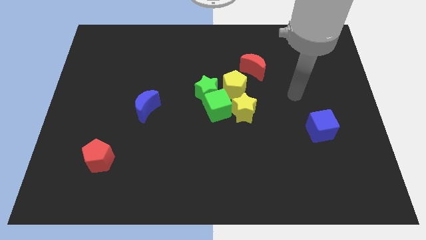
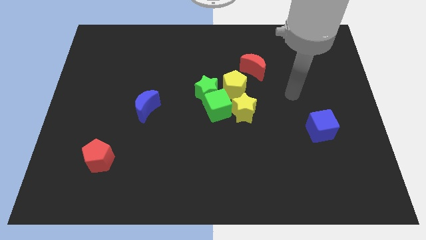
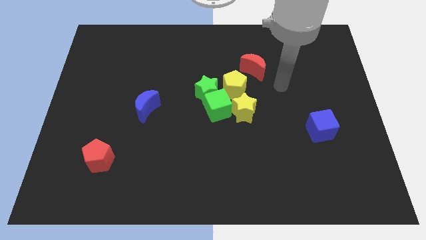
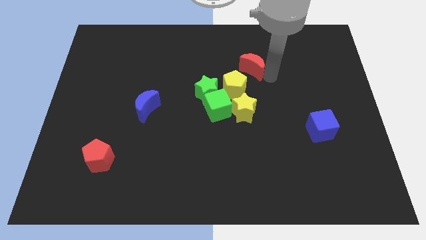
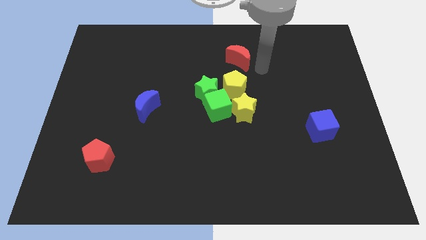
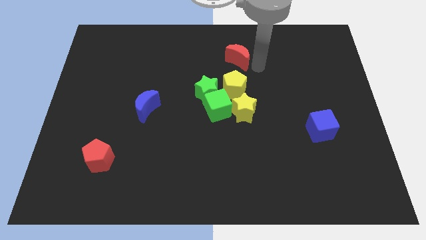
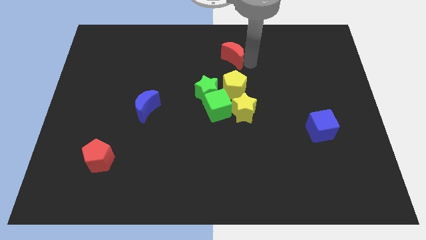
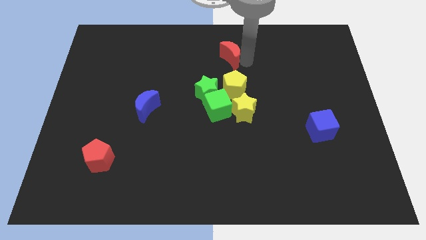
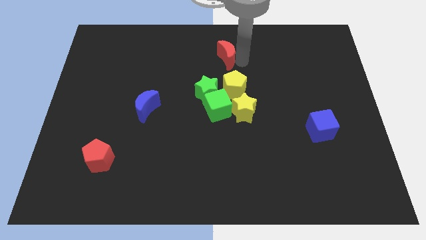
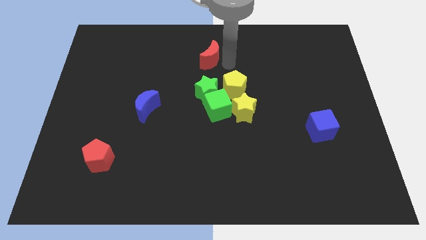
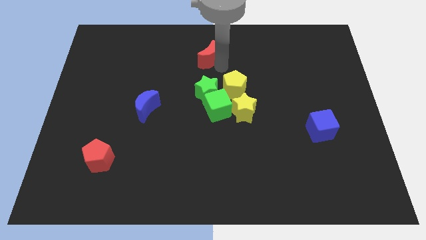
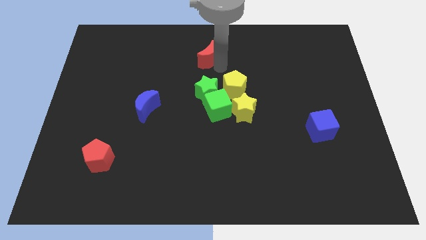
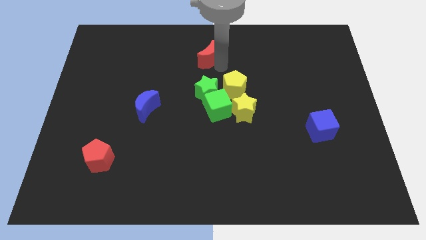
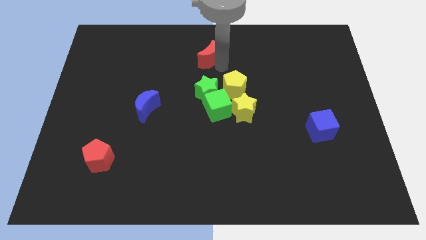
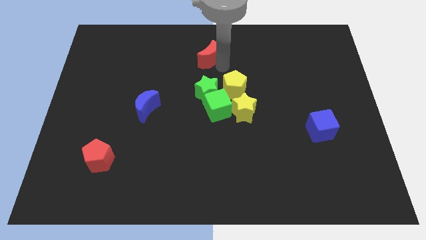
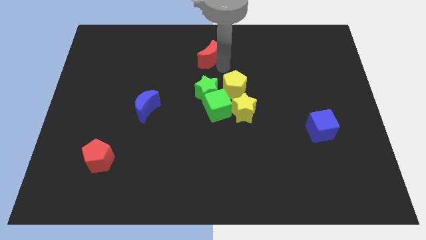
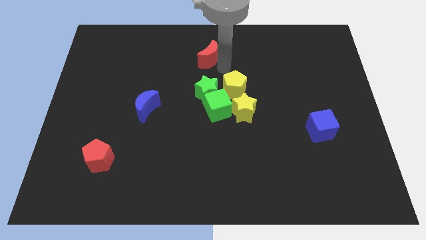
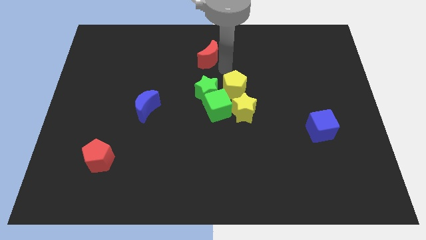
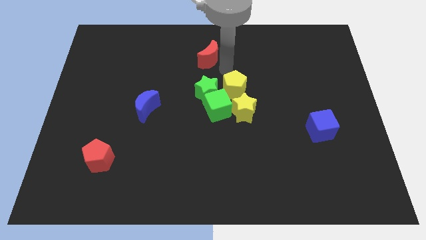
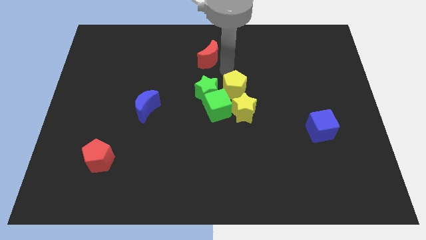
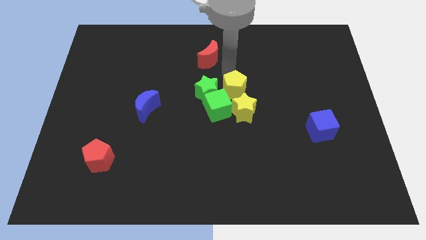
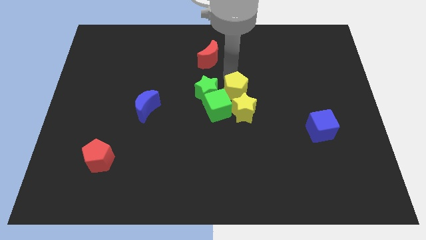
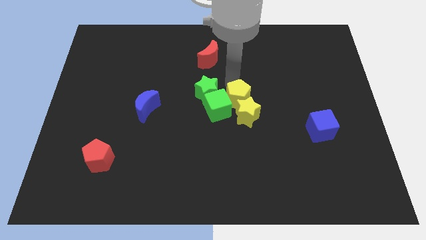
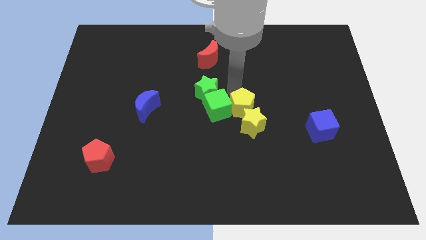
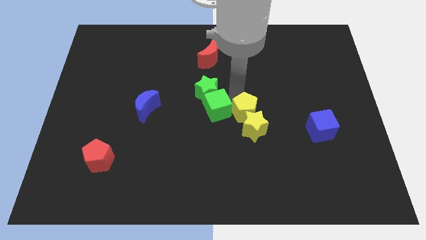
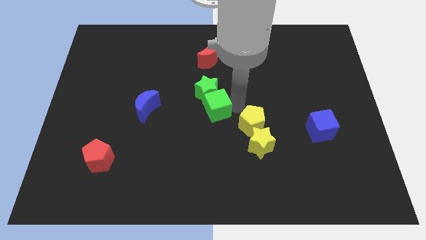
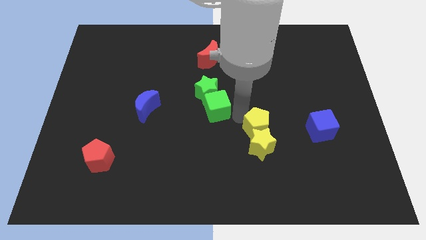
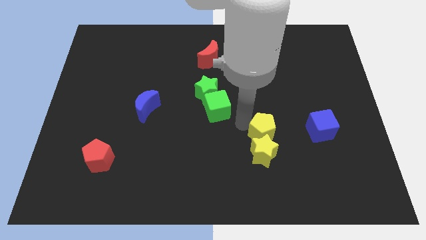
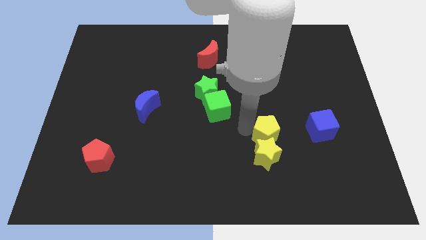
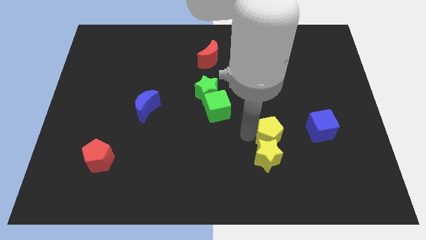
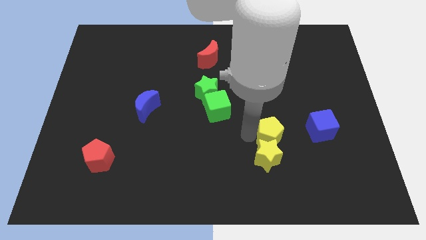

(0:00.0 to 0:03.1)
move the yellow blocks to the left side of the blue cube

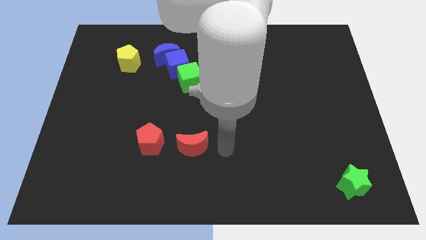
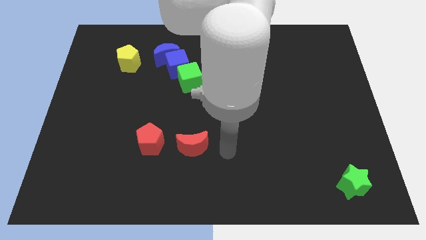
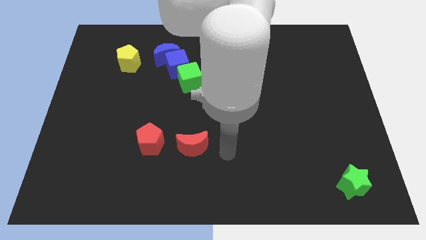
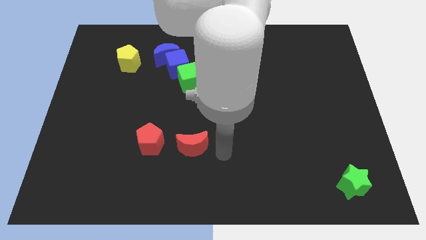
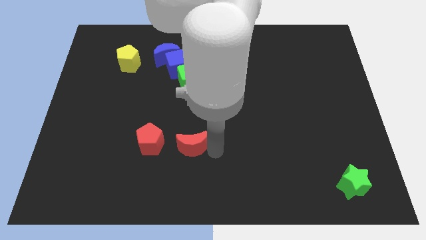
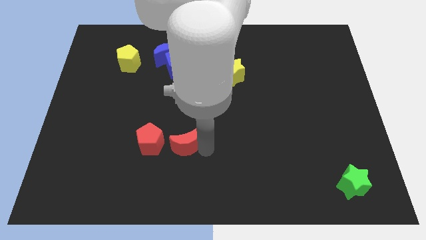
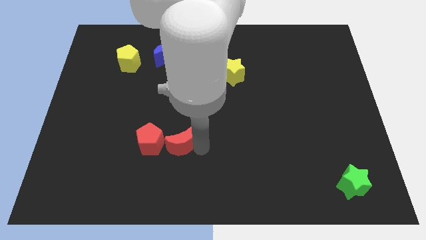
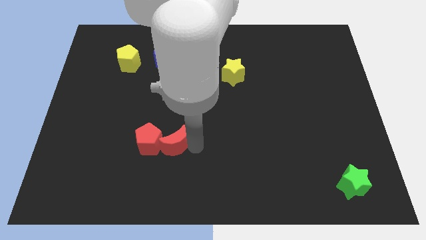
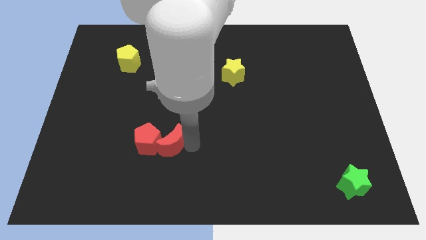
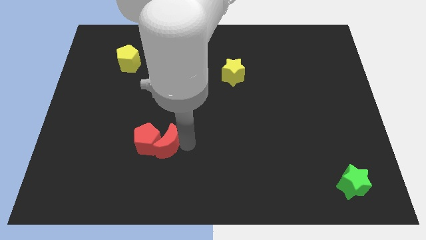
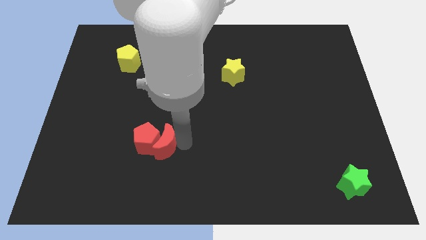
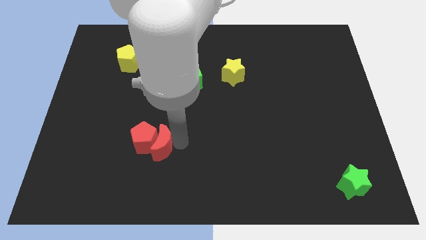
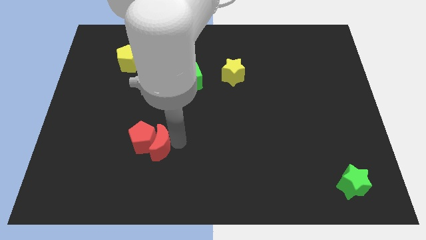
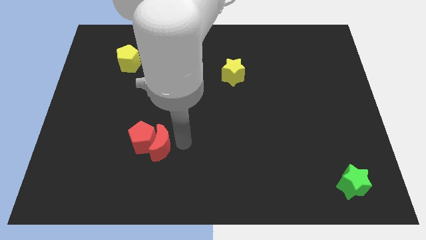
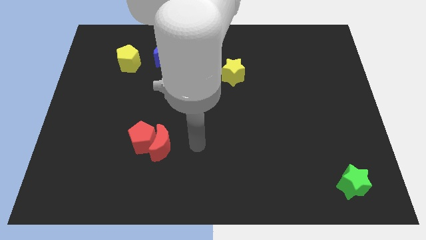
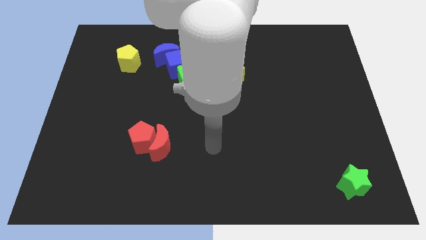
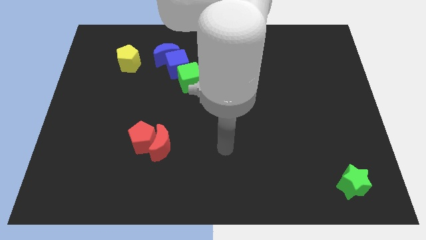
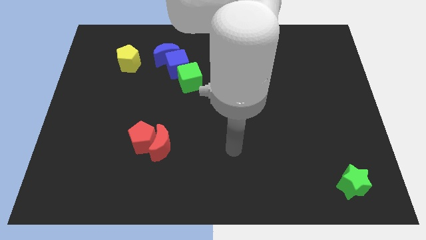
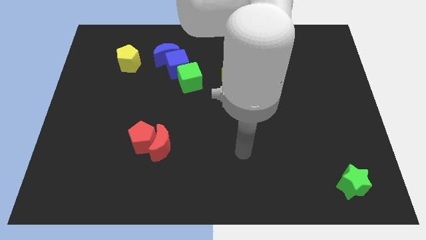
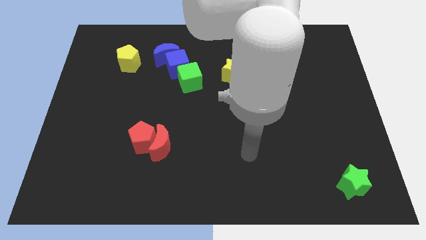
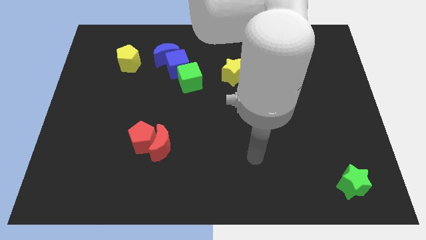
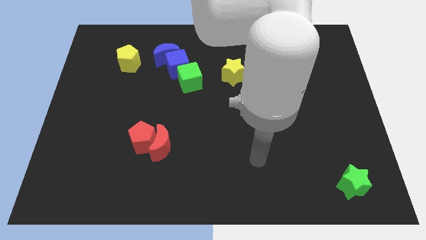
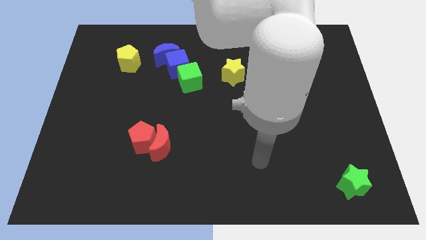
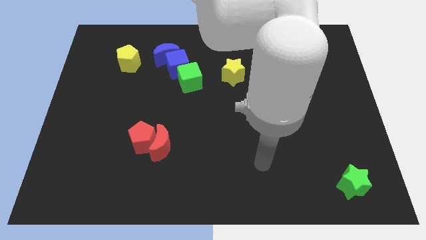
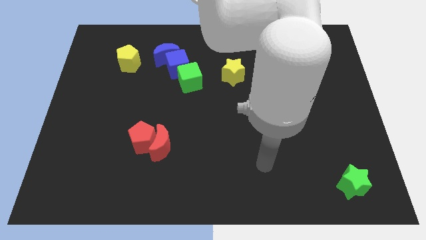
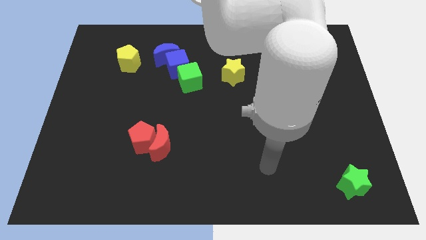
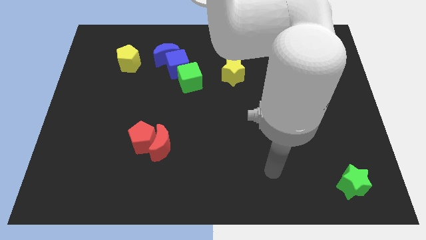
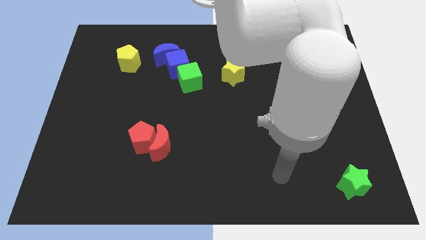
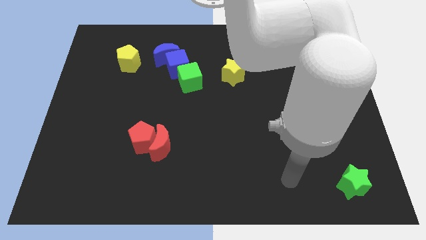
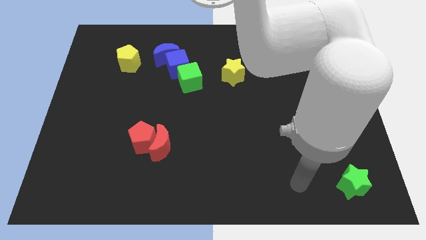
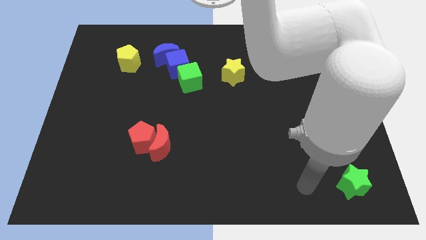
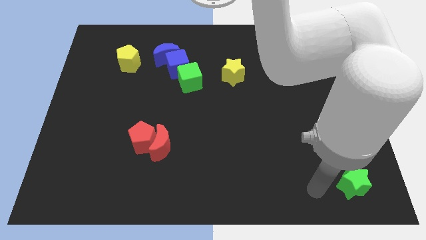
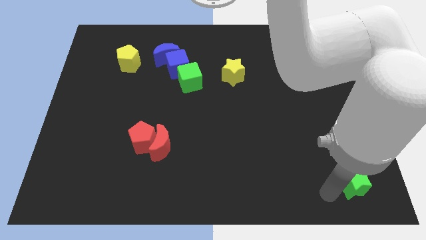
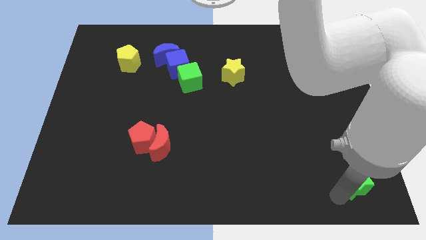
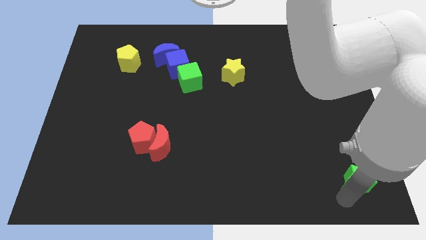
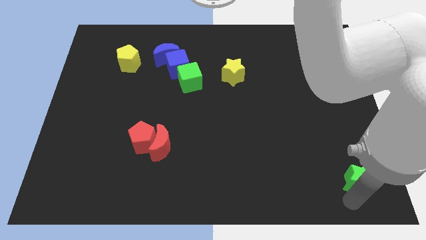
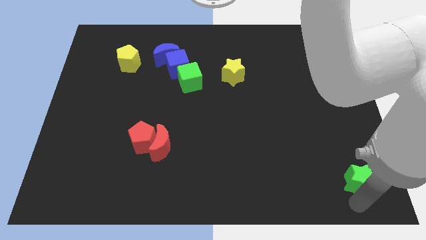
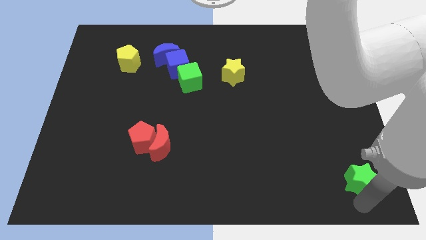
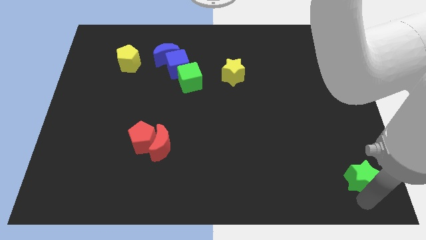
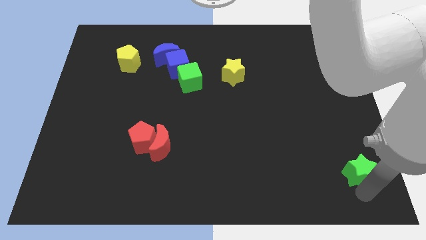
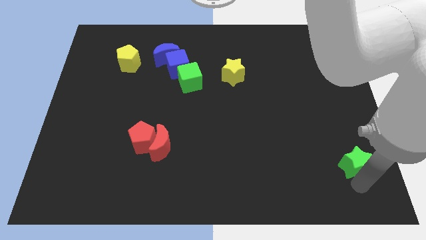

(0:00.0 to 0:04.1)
move the arm to the bottom right

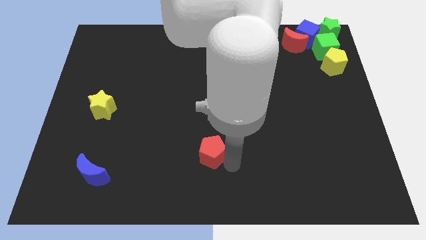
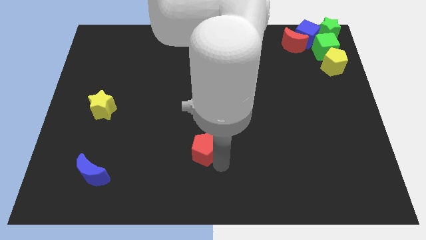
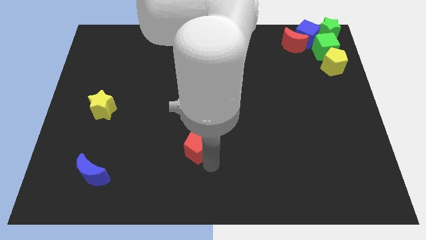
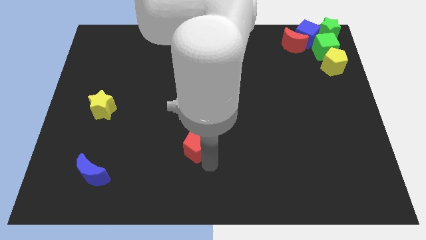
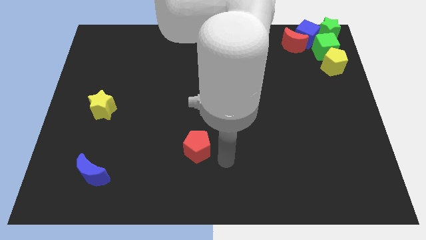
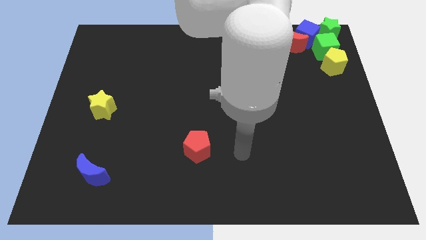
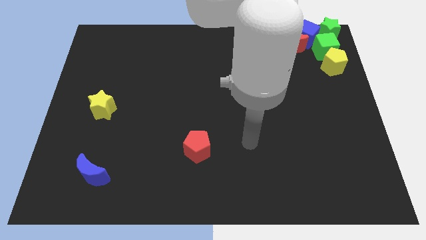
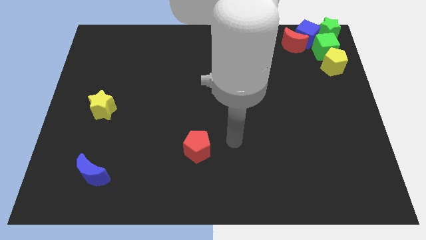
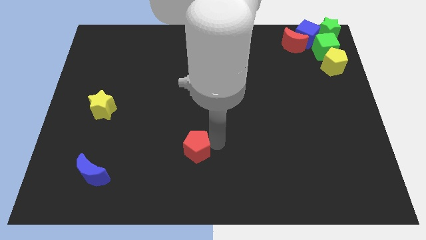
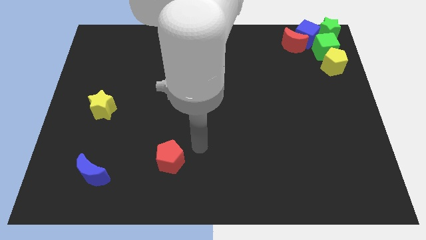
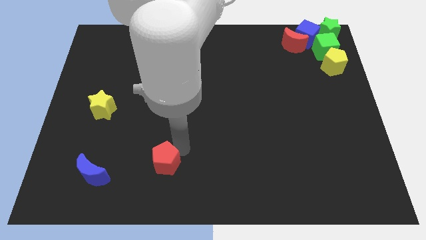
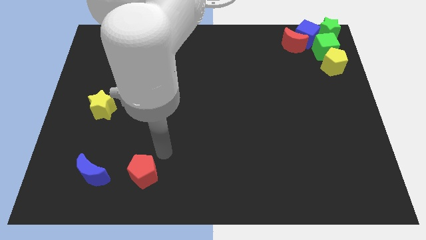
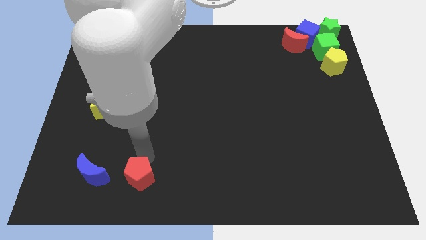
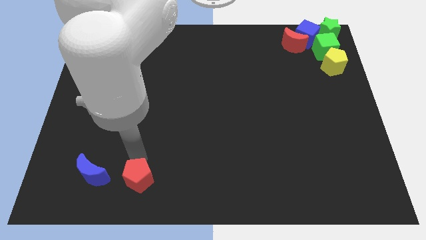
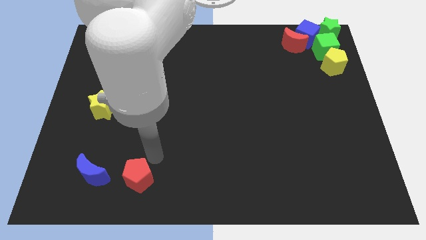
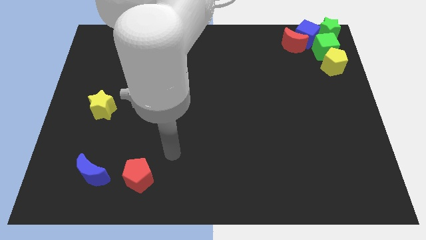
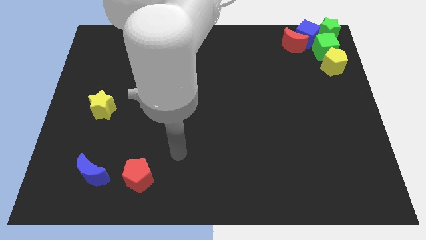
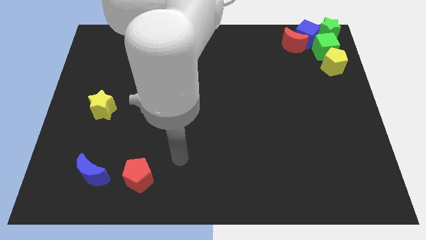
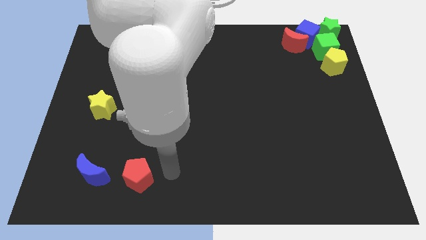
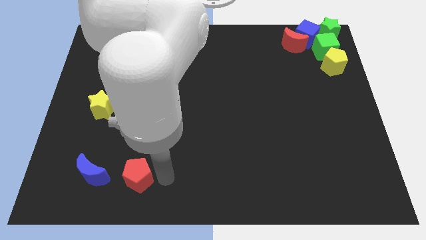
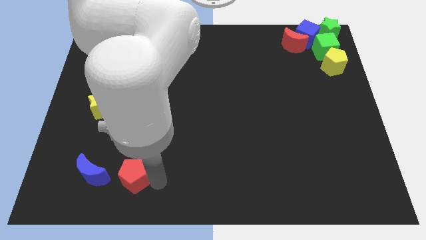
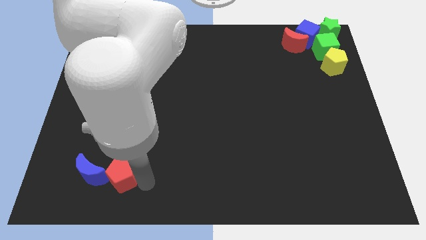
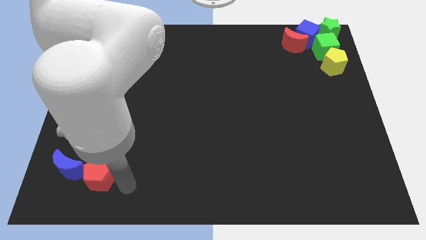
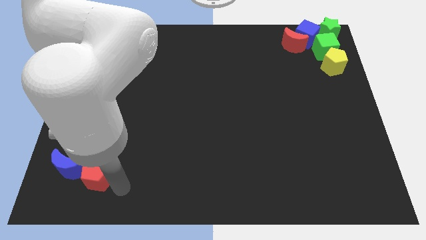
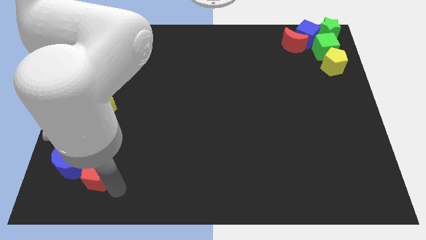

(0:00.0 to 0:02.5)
push red pentagon below yellow star
